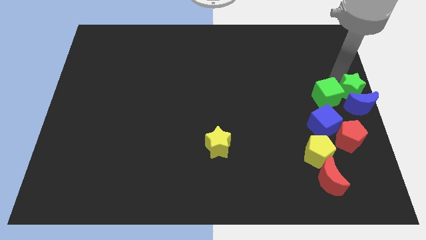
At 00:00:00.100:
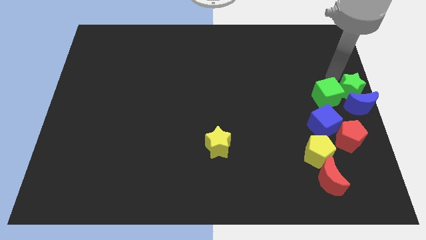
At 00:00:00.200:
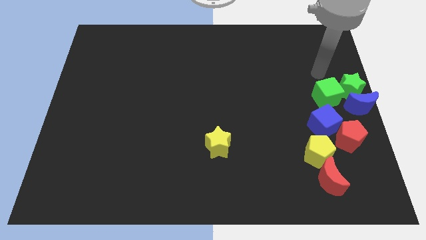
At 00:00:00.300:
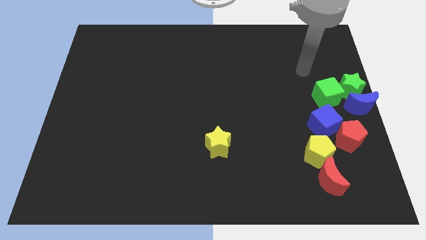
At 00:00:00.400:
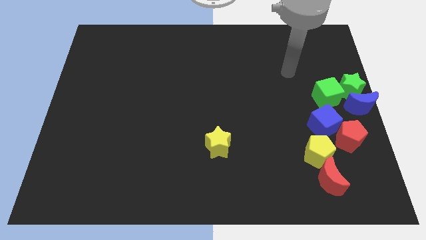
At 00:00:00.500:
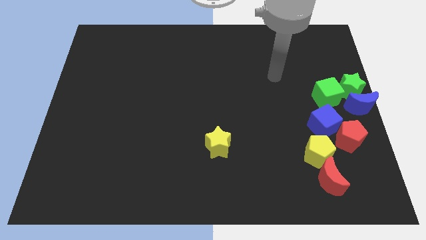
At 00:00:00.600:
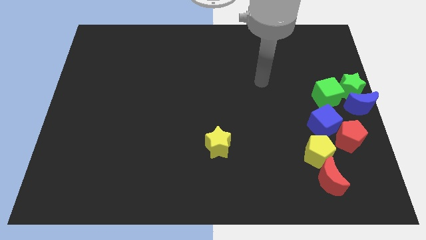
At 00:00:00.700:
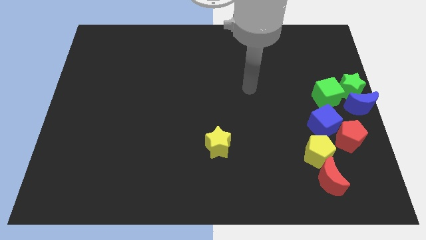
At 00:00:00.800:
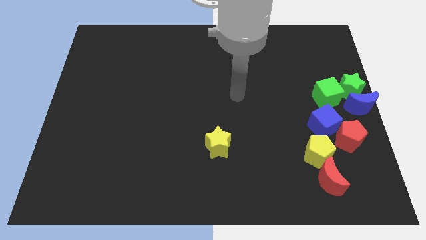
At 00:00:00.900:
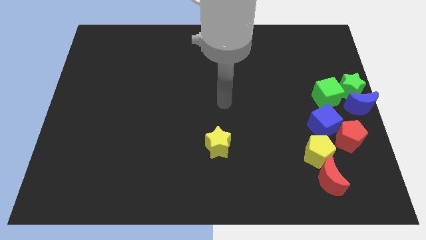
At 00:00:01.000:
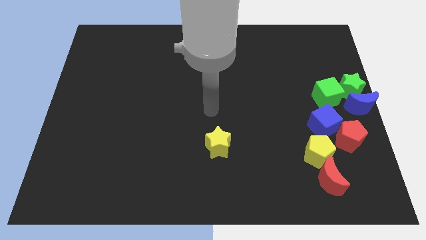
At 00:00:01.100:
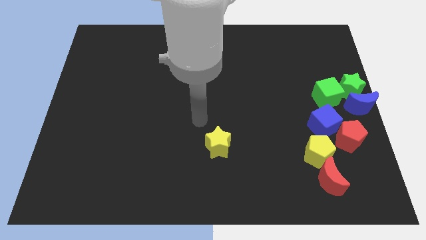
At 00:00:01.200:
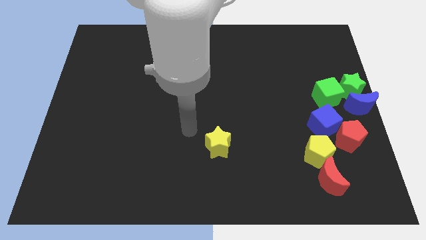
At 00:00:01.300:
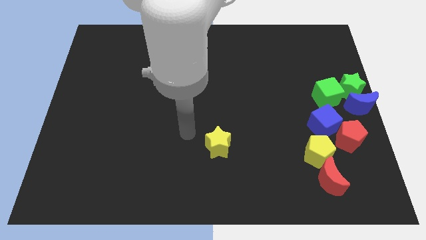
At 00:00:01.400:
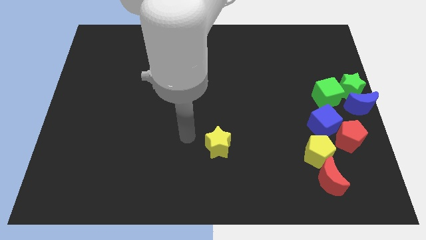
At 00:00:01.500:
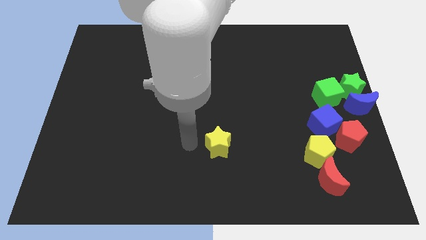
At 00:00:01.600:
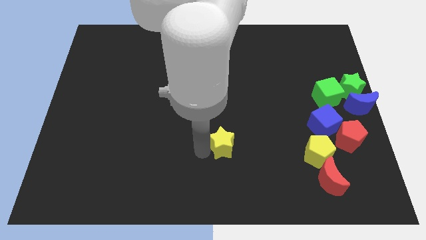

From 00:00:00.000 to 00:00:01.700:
move your arm away frrom the green blocks

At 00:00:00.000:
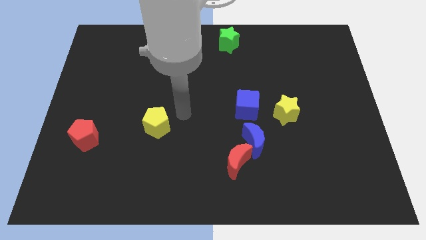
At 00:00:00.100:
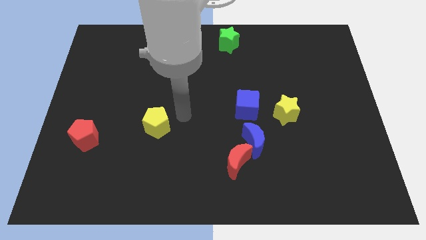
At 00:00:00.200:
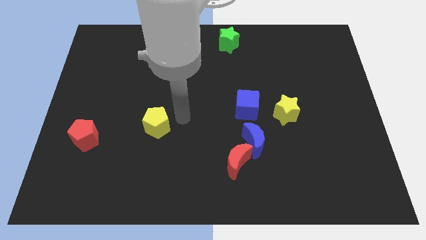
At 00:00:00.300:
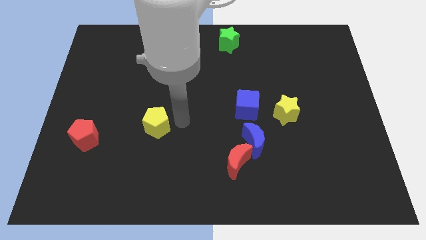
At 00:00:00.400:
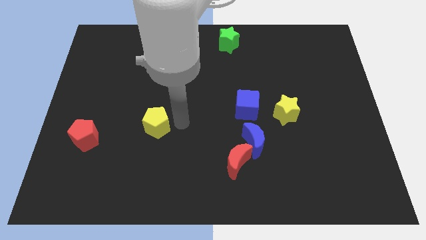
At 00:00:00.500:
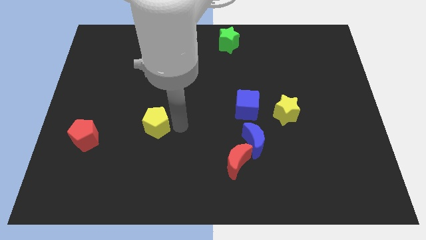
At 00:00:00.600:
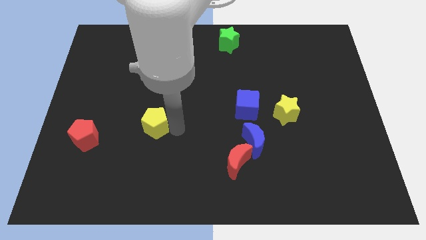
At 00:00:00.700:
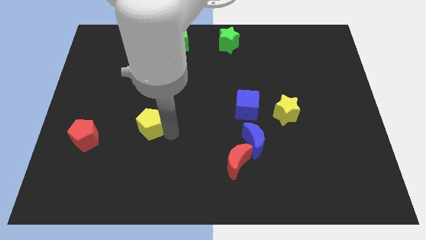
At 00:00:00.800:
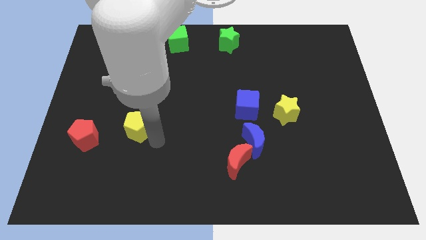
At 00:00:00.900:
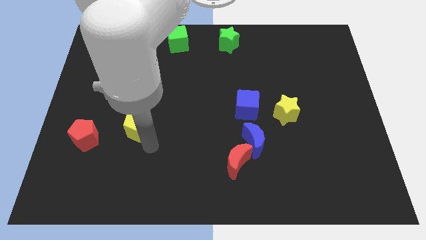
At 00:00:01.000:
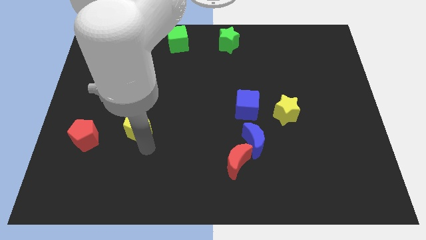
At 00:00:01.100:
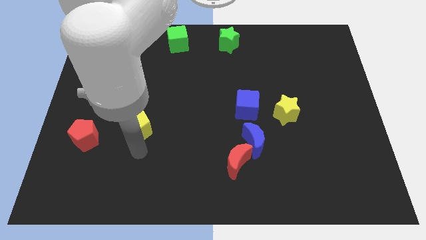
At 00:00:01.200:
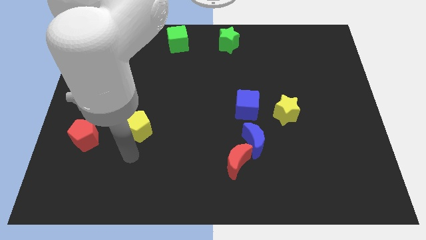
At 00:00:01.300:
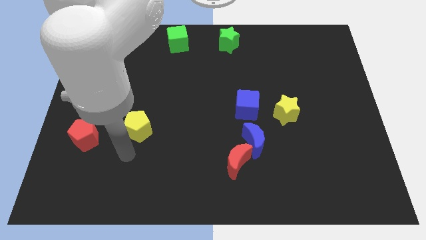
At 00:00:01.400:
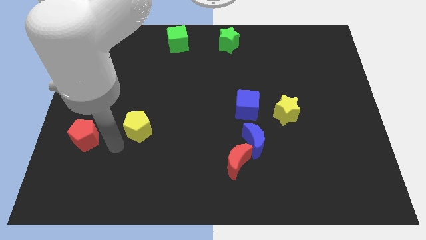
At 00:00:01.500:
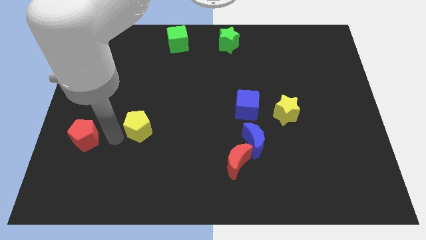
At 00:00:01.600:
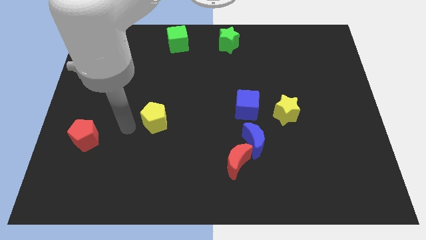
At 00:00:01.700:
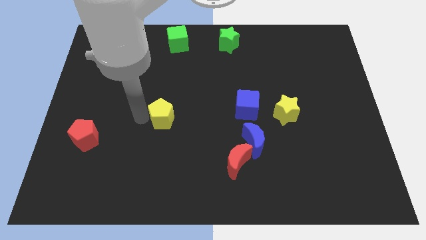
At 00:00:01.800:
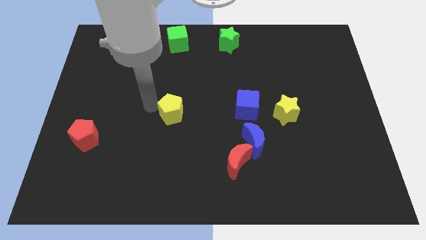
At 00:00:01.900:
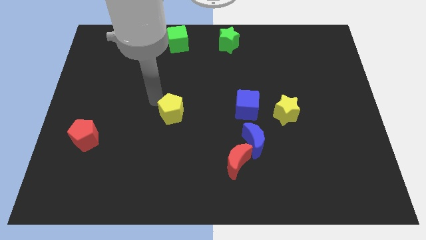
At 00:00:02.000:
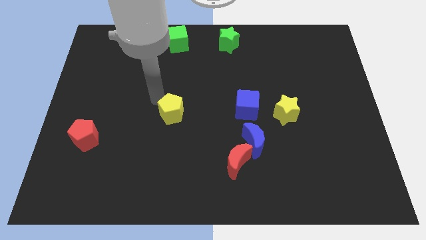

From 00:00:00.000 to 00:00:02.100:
slide yellow pentagon to the left of blue cube

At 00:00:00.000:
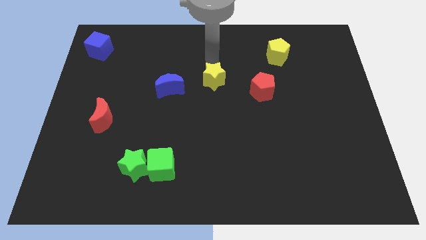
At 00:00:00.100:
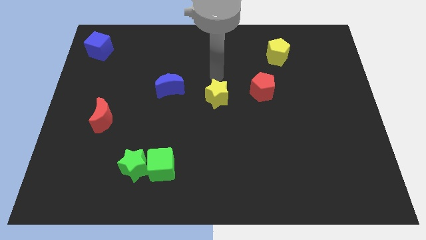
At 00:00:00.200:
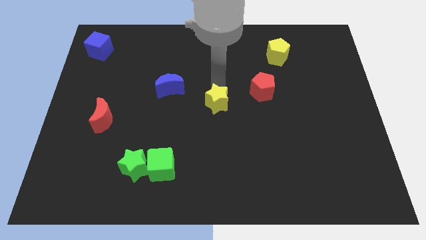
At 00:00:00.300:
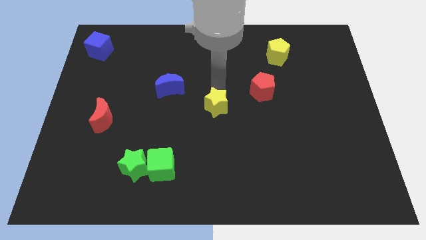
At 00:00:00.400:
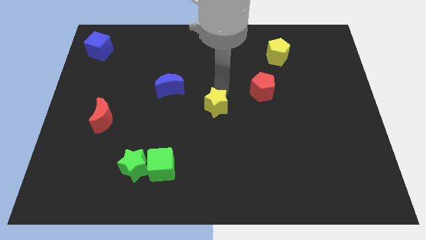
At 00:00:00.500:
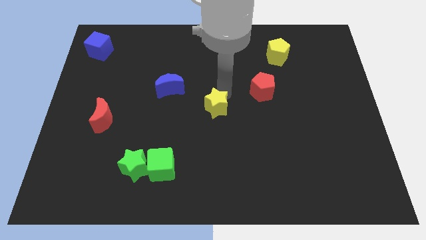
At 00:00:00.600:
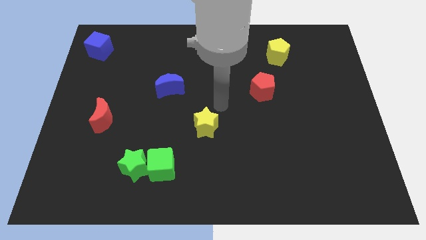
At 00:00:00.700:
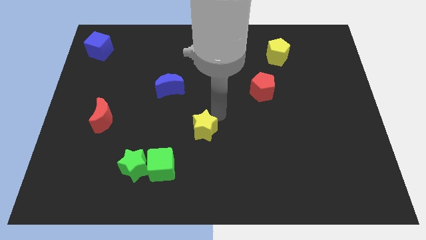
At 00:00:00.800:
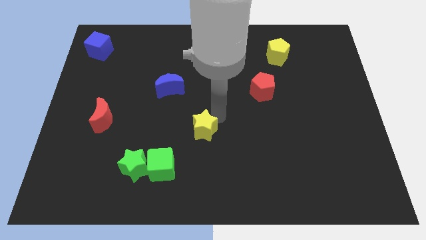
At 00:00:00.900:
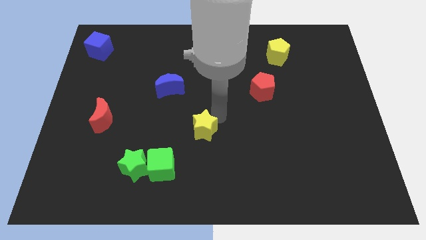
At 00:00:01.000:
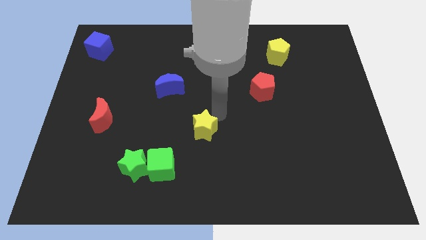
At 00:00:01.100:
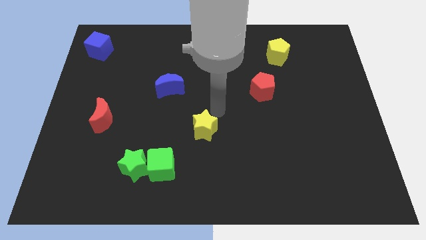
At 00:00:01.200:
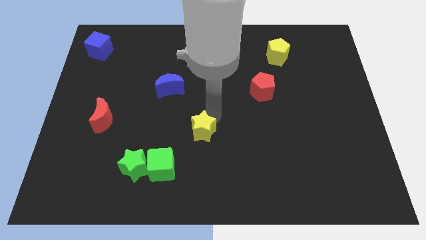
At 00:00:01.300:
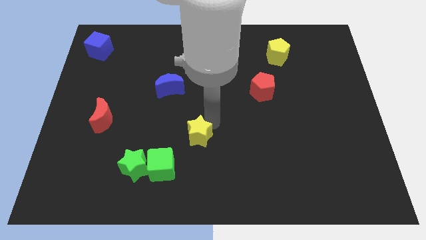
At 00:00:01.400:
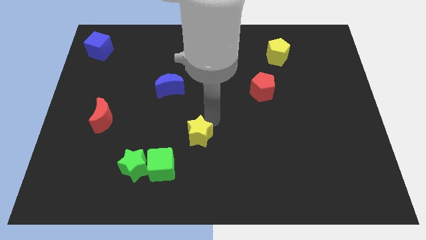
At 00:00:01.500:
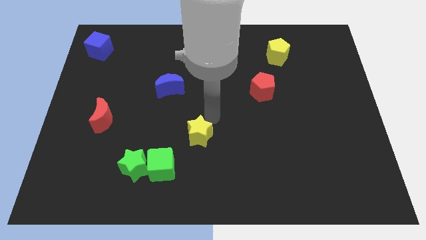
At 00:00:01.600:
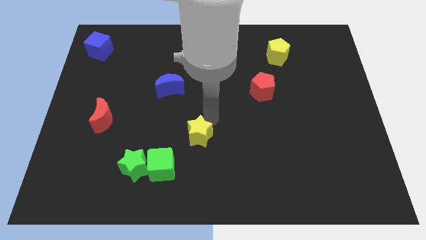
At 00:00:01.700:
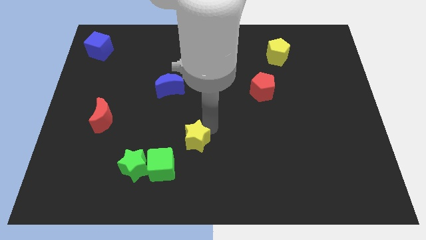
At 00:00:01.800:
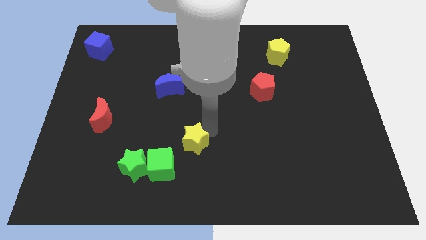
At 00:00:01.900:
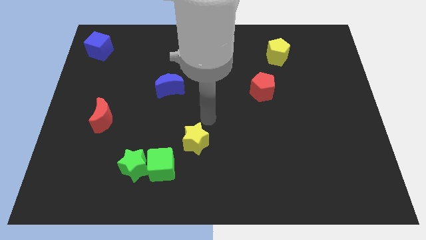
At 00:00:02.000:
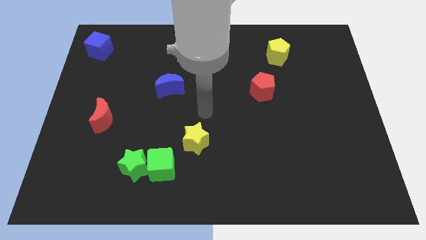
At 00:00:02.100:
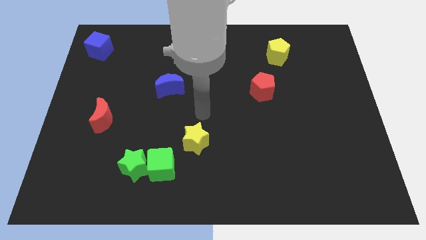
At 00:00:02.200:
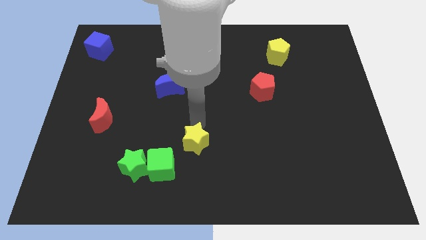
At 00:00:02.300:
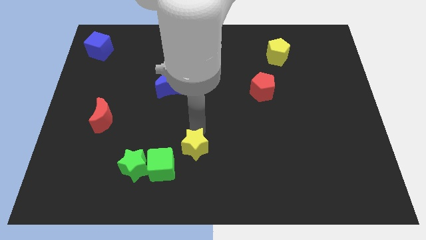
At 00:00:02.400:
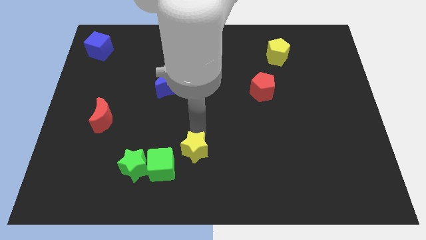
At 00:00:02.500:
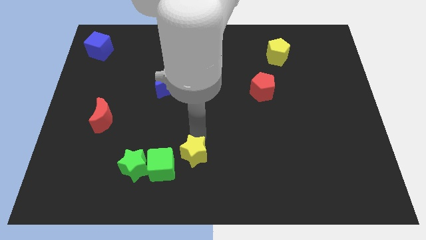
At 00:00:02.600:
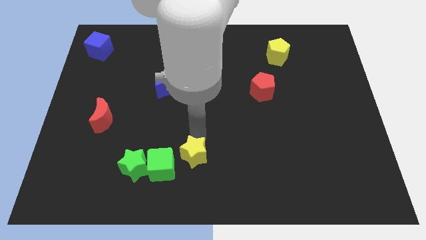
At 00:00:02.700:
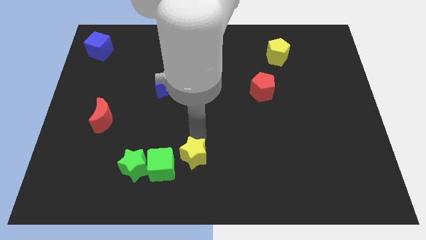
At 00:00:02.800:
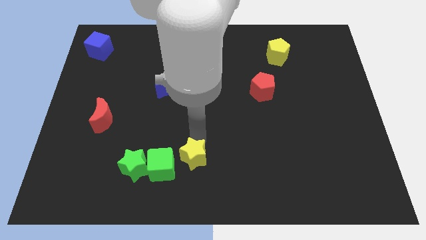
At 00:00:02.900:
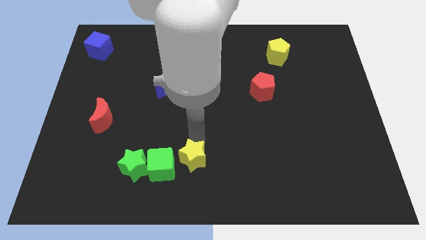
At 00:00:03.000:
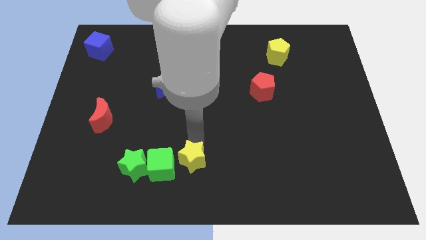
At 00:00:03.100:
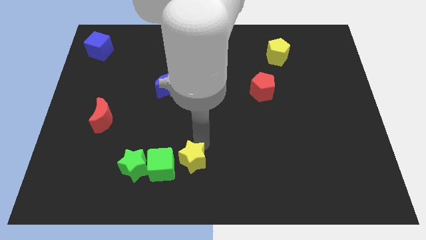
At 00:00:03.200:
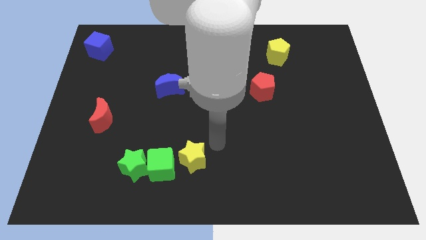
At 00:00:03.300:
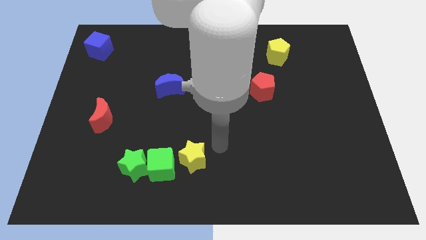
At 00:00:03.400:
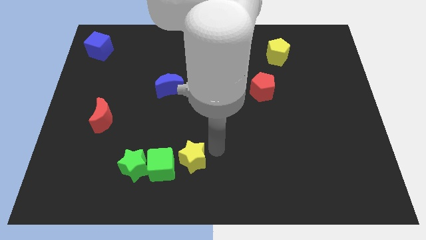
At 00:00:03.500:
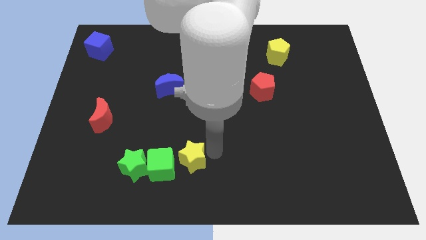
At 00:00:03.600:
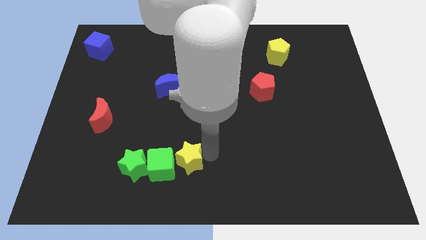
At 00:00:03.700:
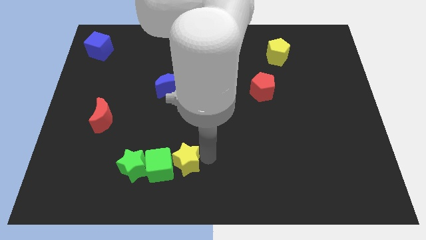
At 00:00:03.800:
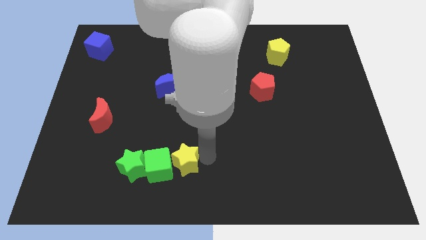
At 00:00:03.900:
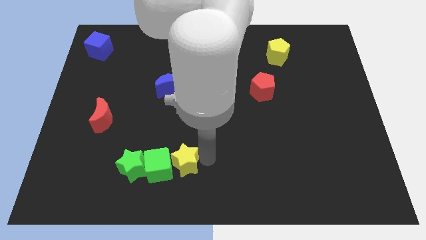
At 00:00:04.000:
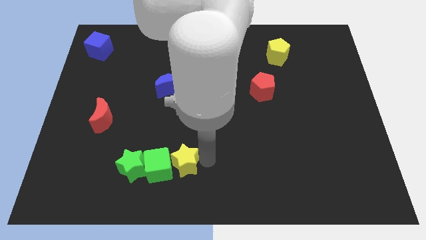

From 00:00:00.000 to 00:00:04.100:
place the yellow star on the right side of green cube

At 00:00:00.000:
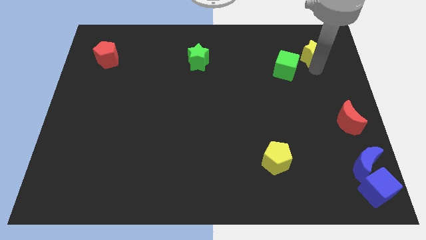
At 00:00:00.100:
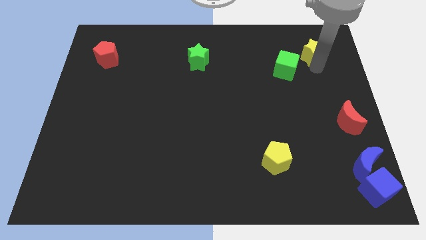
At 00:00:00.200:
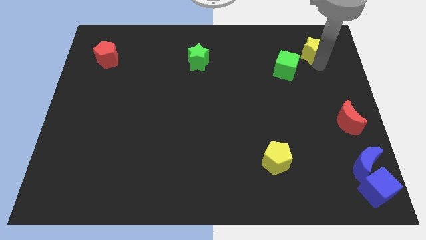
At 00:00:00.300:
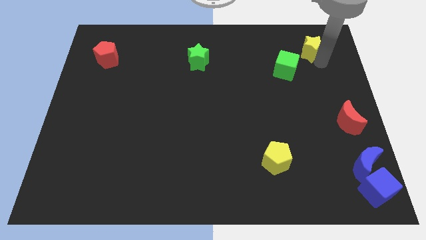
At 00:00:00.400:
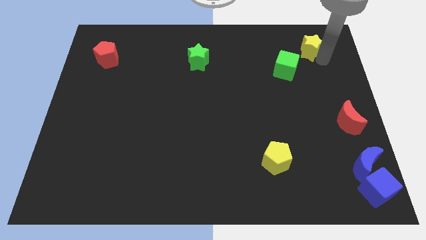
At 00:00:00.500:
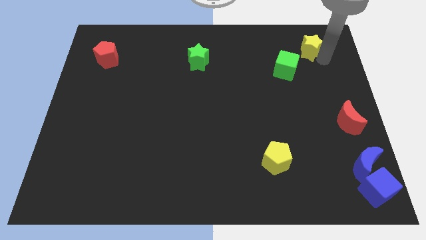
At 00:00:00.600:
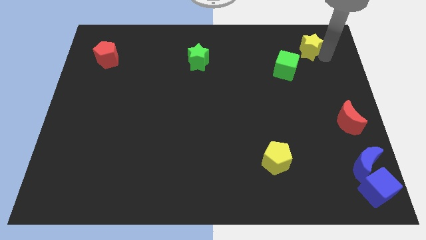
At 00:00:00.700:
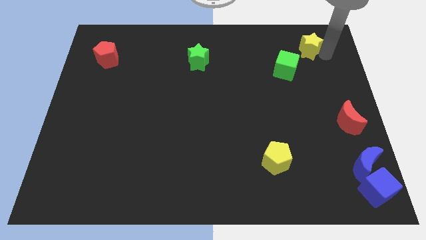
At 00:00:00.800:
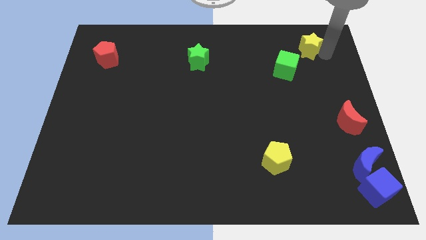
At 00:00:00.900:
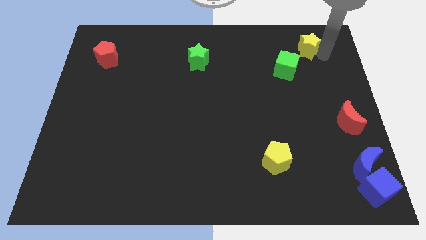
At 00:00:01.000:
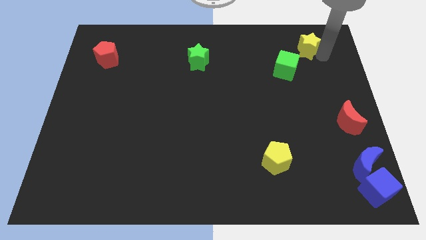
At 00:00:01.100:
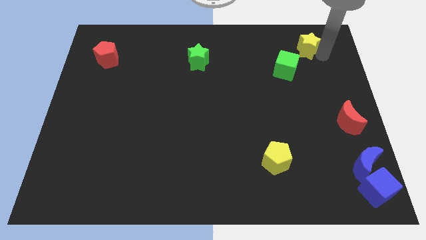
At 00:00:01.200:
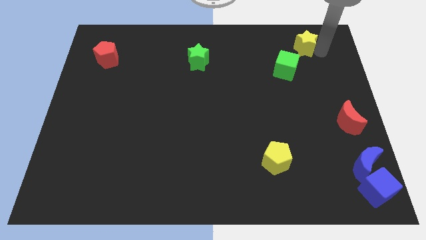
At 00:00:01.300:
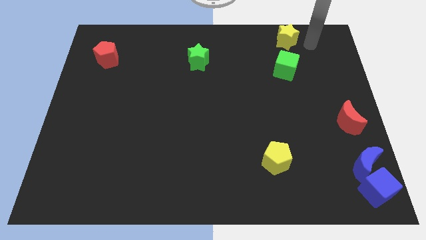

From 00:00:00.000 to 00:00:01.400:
move the yellow star to the top of the green cube
